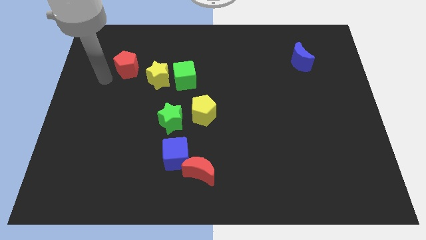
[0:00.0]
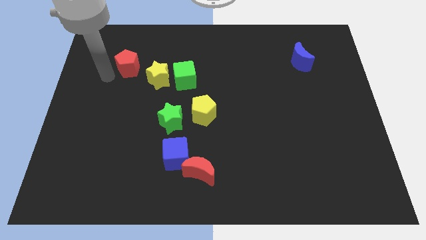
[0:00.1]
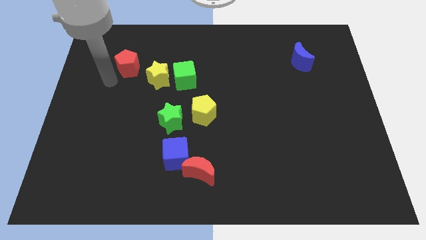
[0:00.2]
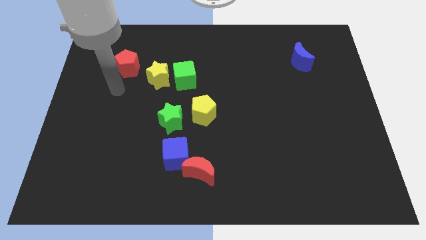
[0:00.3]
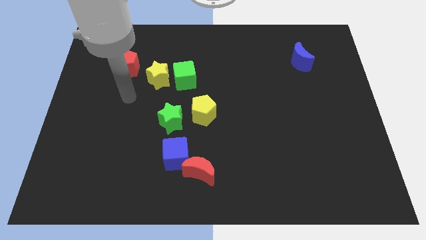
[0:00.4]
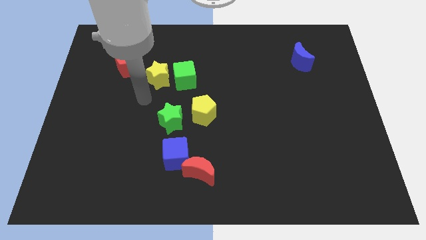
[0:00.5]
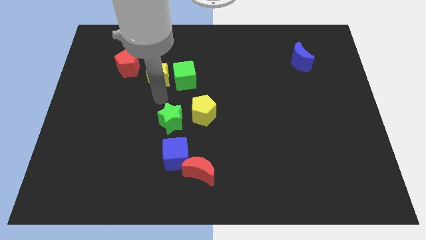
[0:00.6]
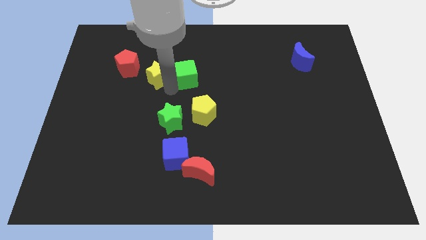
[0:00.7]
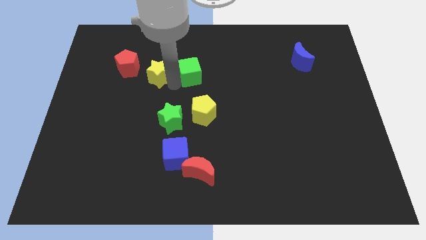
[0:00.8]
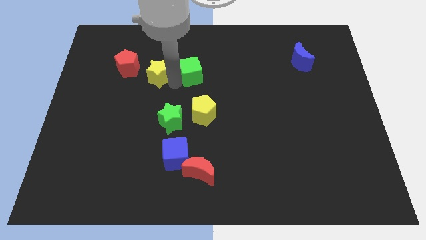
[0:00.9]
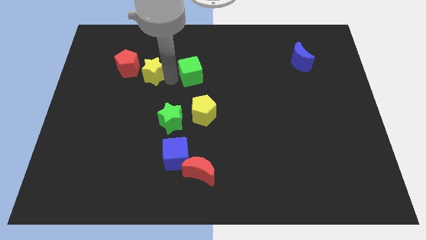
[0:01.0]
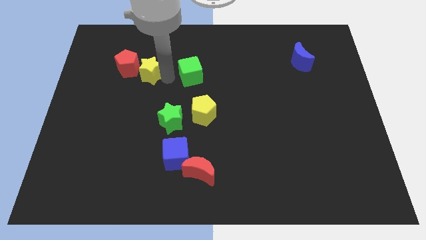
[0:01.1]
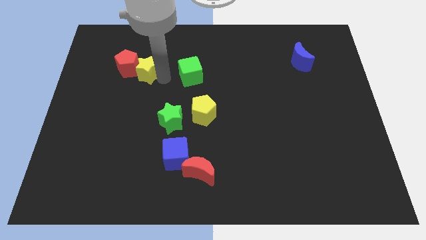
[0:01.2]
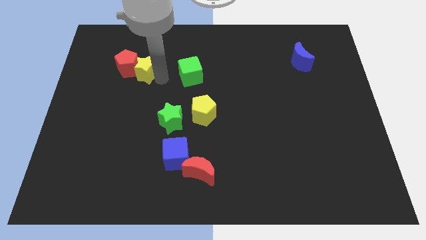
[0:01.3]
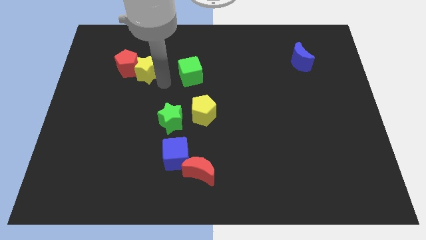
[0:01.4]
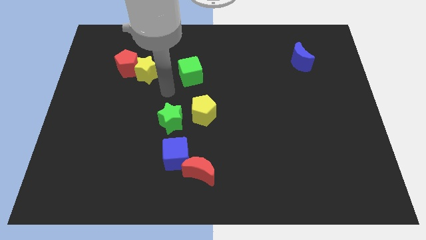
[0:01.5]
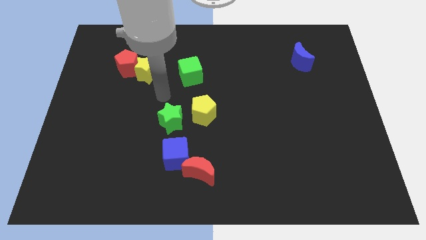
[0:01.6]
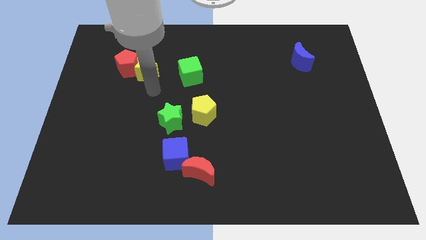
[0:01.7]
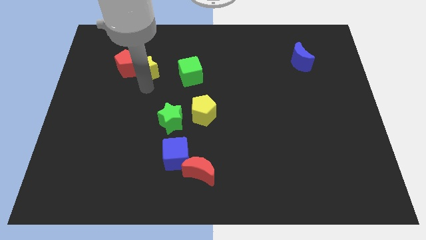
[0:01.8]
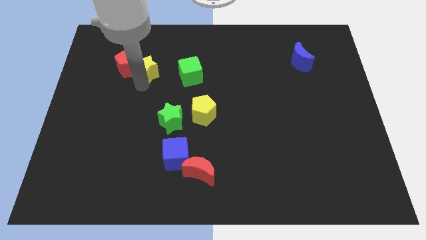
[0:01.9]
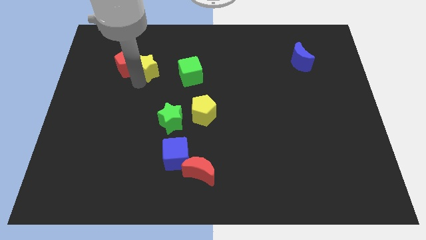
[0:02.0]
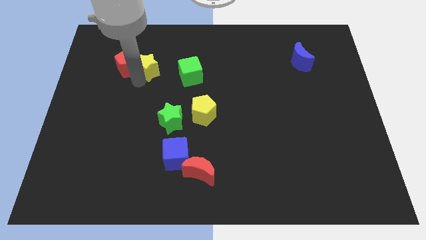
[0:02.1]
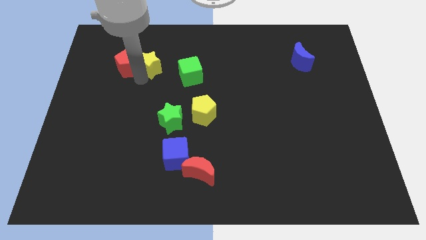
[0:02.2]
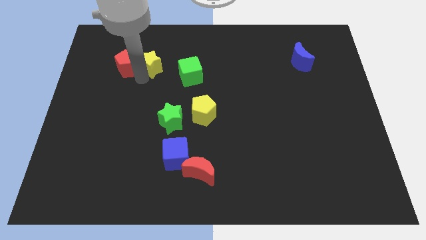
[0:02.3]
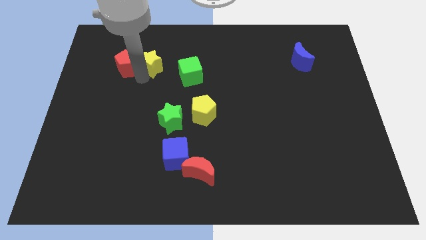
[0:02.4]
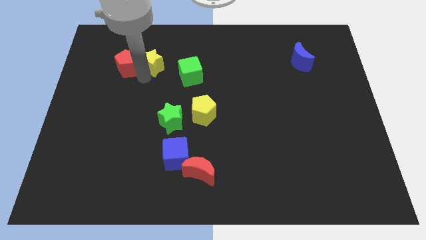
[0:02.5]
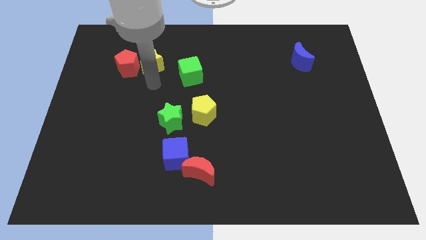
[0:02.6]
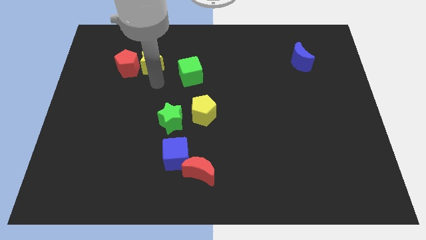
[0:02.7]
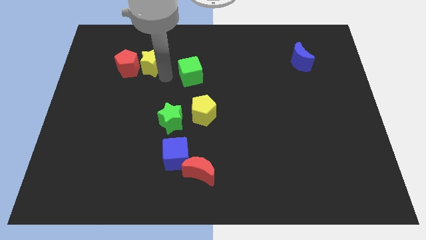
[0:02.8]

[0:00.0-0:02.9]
place the yellow star to the right of the red pentagon

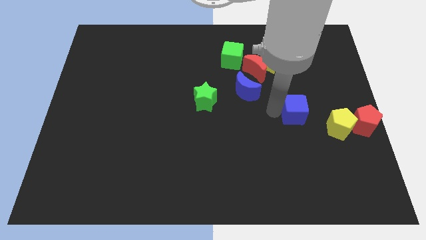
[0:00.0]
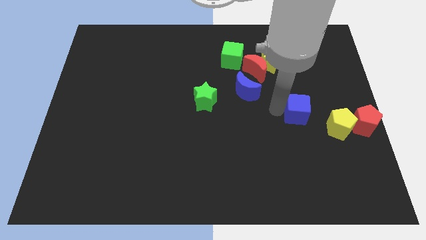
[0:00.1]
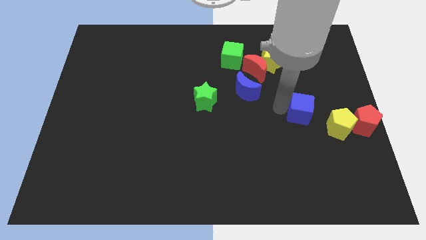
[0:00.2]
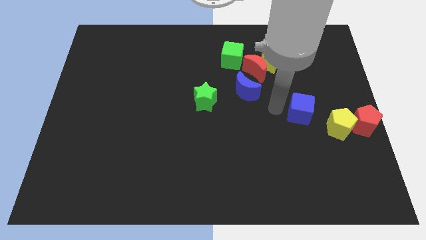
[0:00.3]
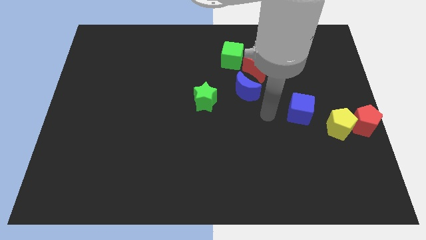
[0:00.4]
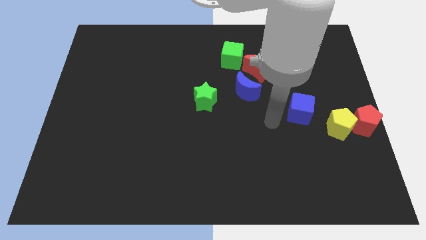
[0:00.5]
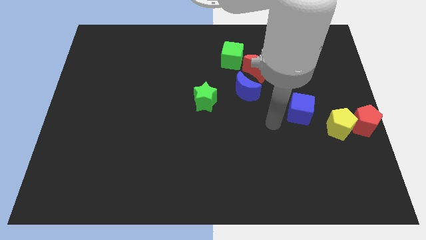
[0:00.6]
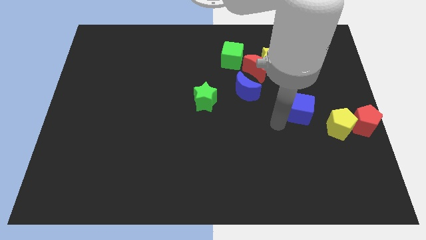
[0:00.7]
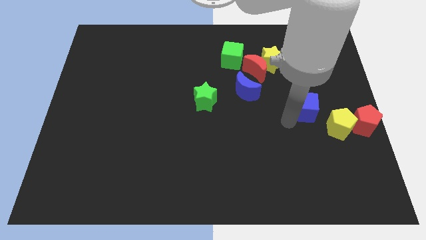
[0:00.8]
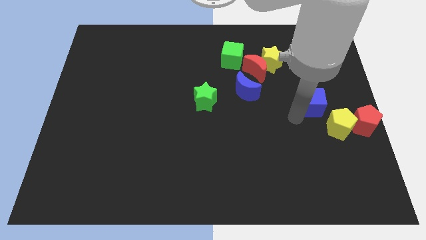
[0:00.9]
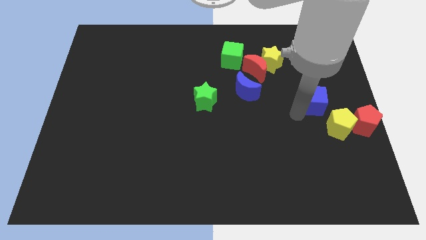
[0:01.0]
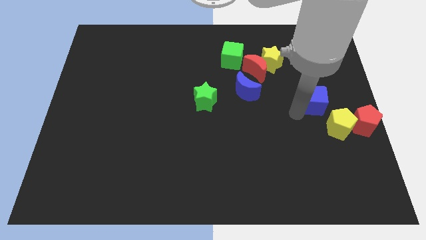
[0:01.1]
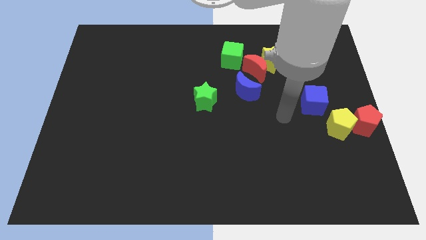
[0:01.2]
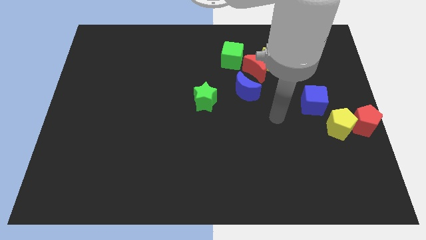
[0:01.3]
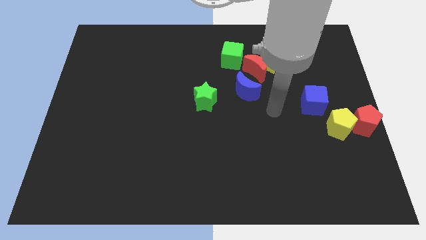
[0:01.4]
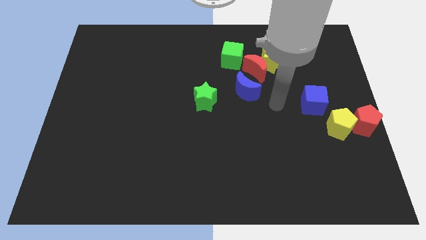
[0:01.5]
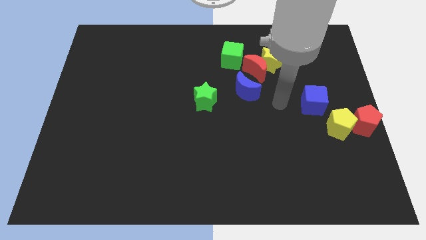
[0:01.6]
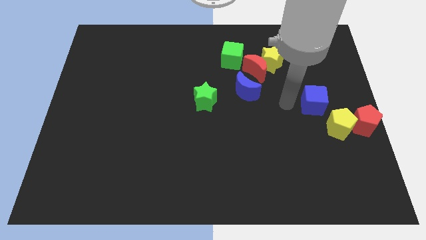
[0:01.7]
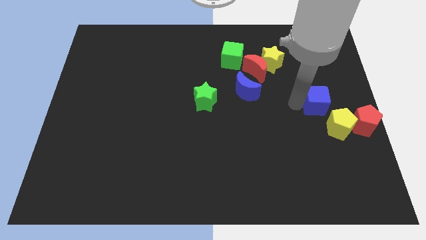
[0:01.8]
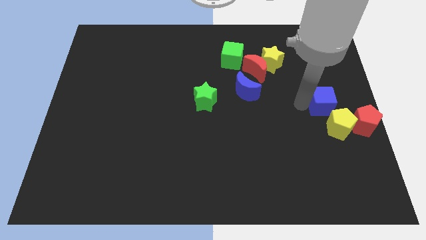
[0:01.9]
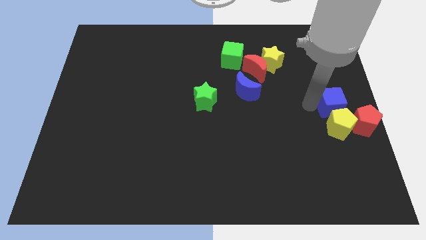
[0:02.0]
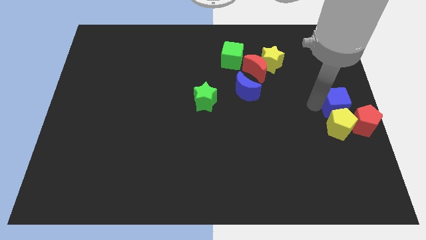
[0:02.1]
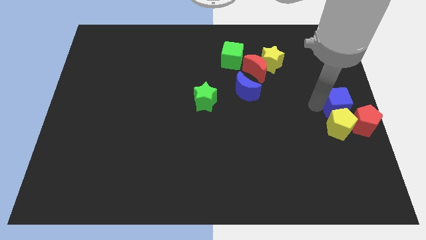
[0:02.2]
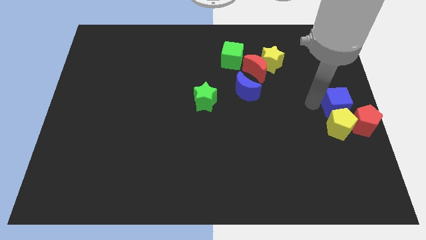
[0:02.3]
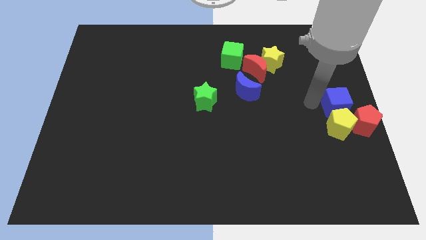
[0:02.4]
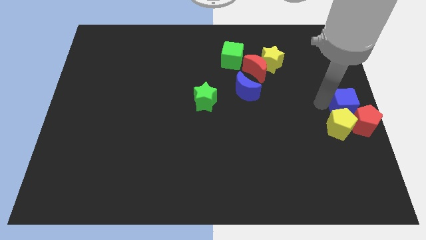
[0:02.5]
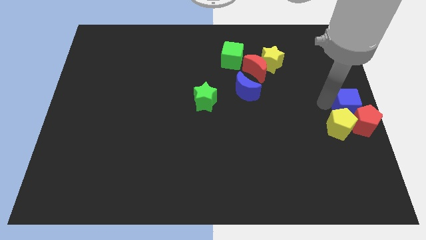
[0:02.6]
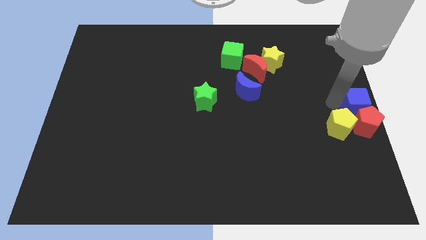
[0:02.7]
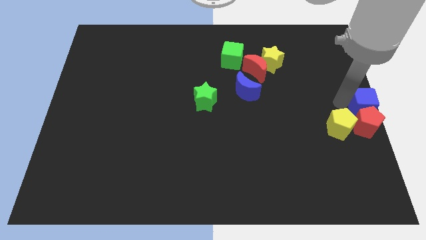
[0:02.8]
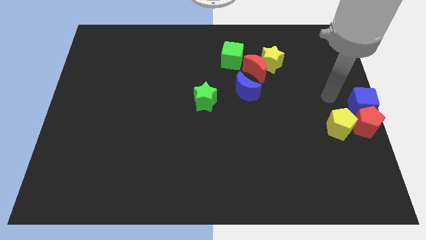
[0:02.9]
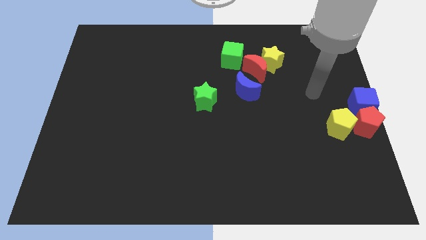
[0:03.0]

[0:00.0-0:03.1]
arrange the blue cube on the top of the red pentagon

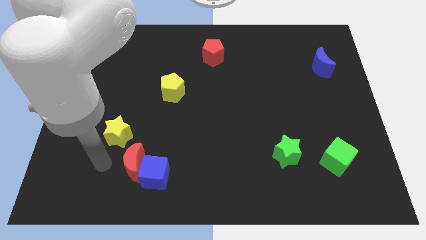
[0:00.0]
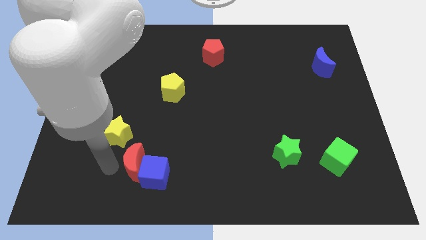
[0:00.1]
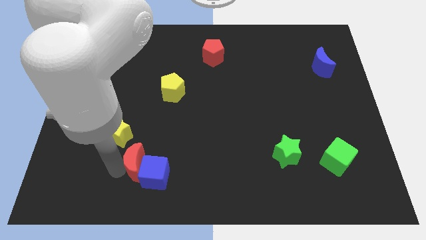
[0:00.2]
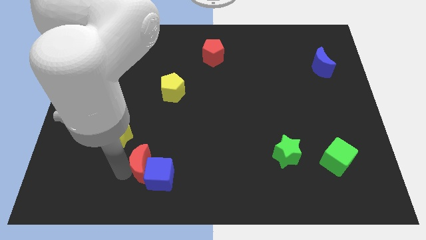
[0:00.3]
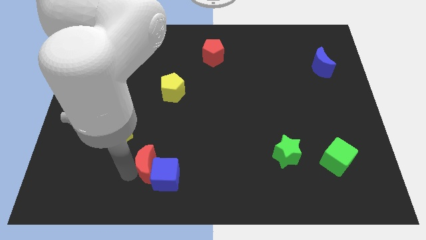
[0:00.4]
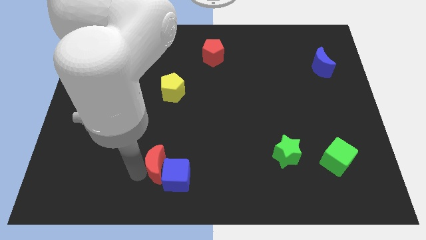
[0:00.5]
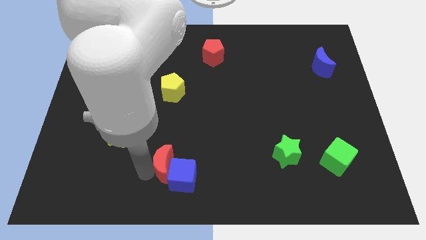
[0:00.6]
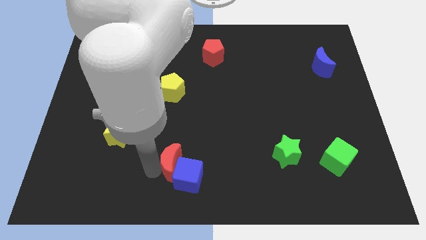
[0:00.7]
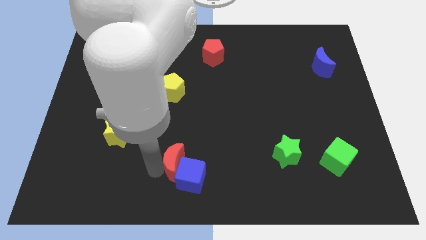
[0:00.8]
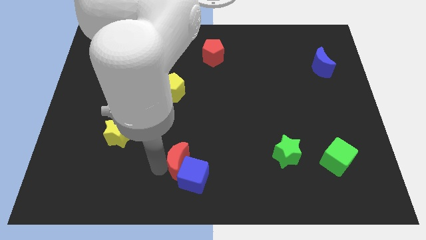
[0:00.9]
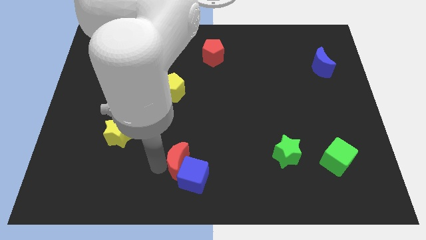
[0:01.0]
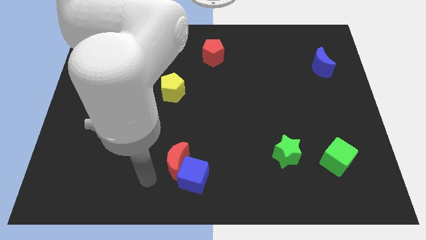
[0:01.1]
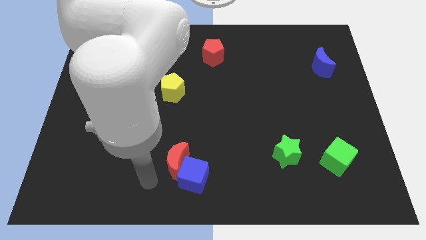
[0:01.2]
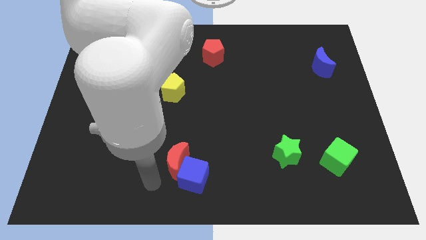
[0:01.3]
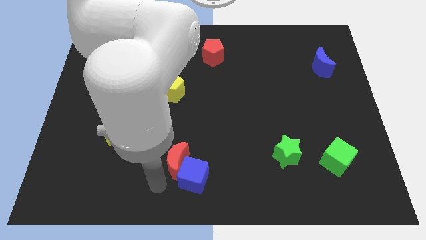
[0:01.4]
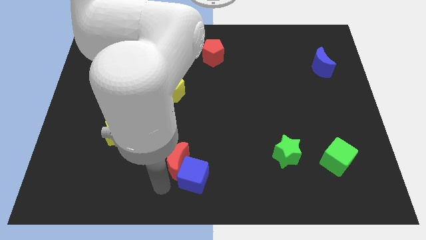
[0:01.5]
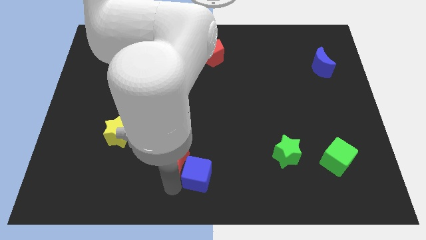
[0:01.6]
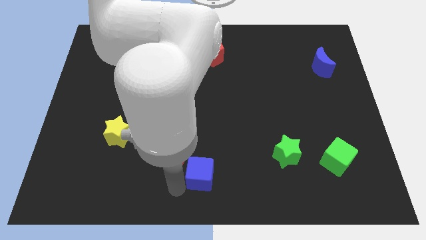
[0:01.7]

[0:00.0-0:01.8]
move red crescent and blue cube slightly right

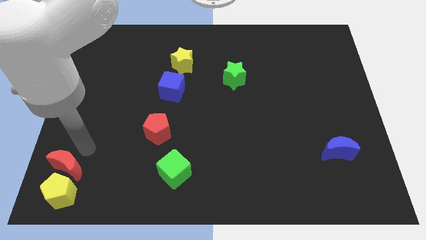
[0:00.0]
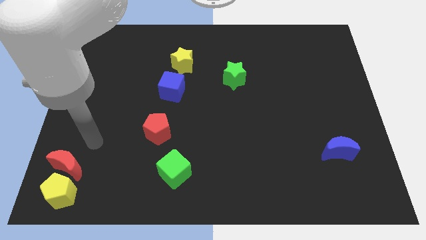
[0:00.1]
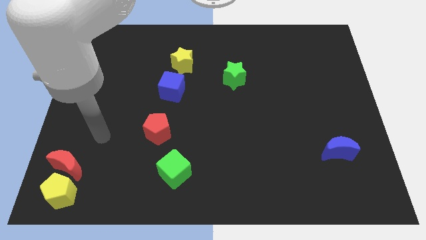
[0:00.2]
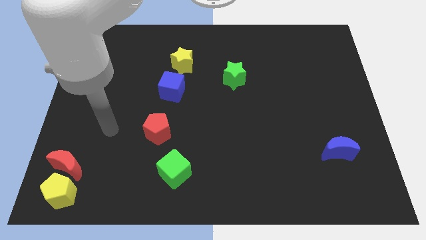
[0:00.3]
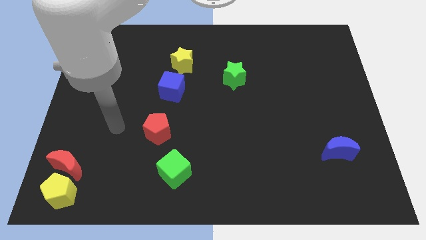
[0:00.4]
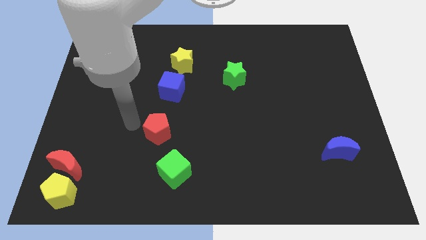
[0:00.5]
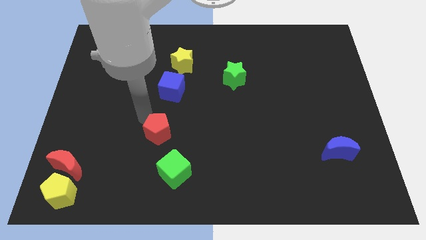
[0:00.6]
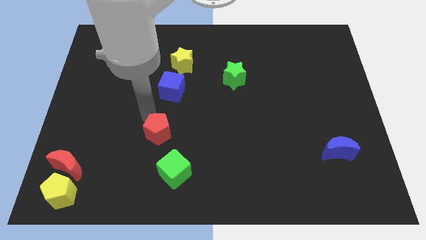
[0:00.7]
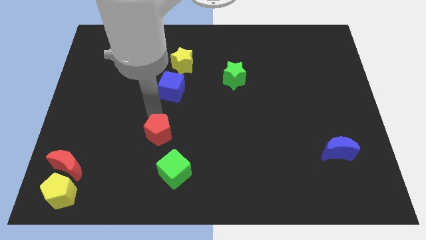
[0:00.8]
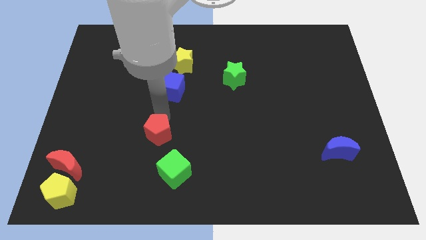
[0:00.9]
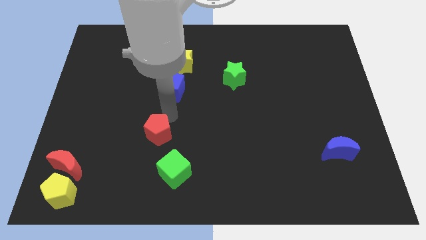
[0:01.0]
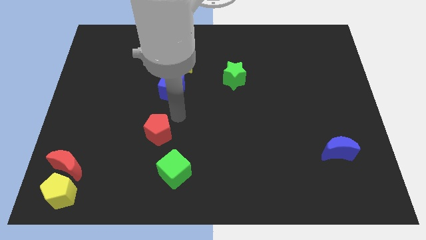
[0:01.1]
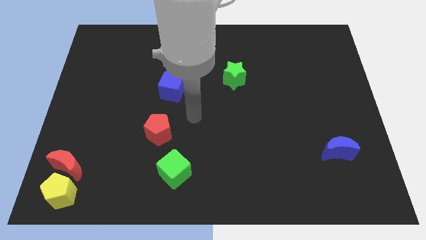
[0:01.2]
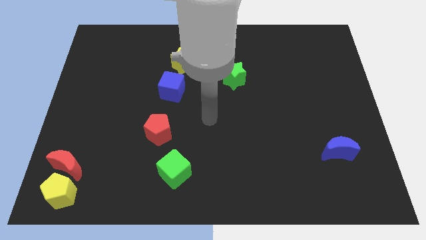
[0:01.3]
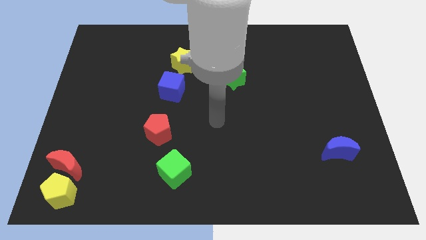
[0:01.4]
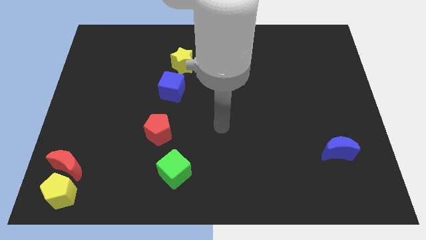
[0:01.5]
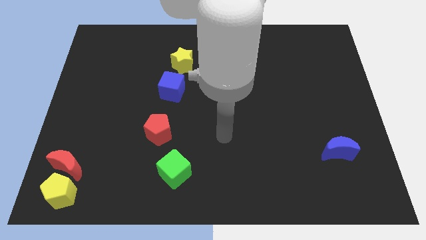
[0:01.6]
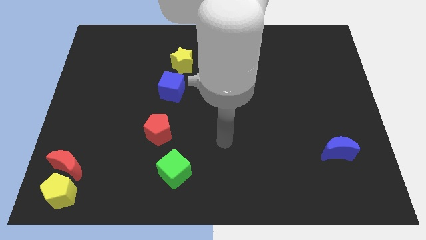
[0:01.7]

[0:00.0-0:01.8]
move your arm to the right of the red pentagon
